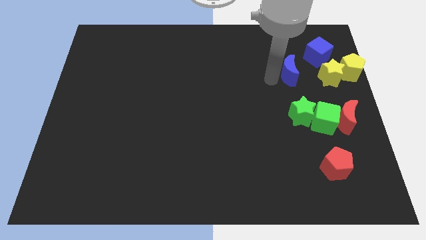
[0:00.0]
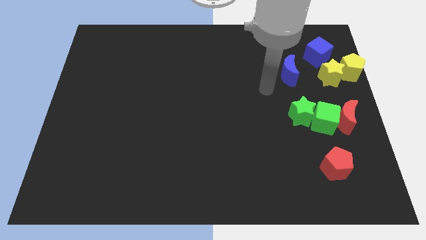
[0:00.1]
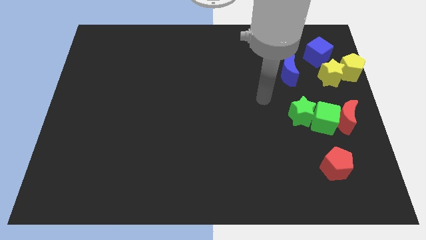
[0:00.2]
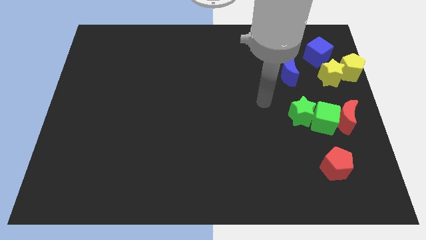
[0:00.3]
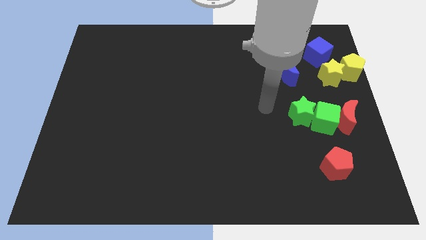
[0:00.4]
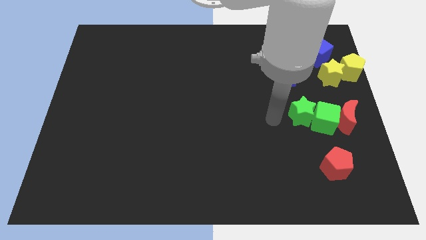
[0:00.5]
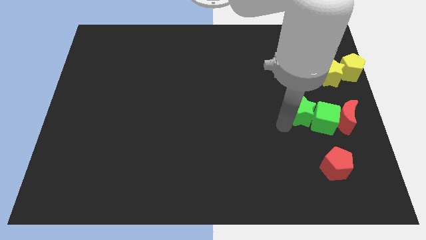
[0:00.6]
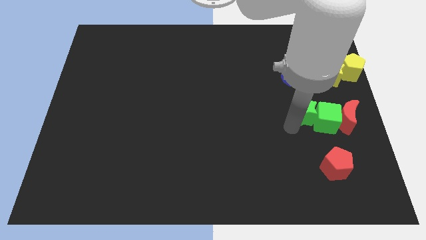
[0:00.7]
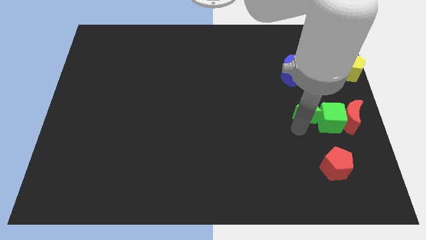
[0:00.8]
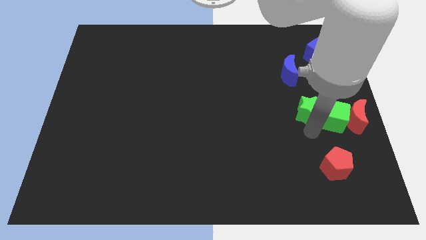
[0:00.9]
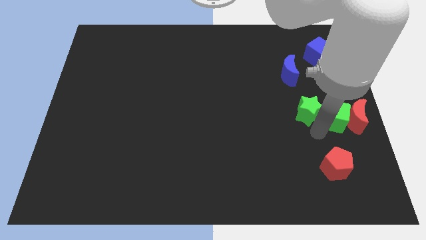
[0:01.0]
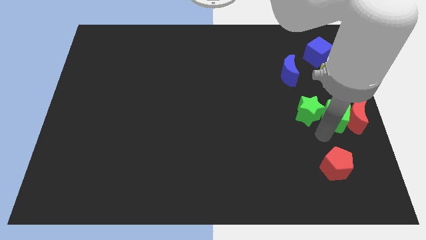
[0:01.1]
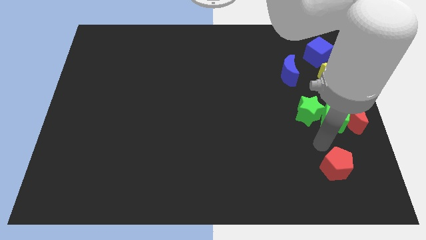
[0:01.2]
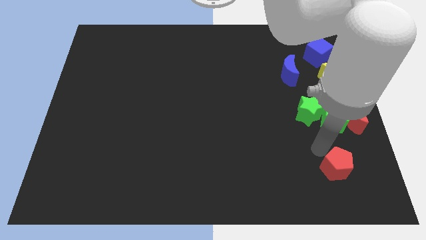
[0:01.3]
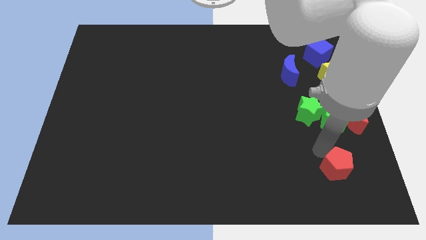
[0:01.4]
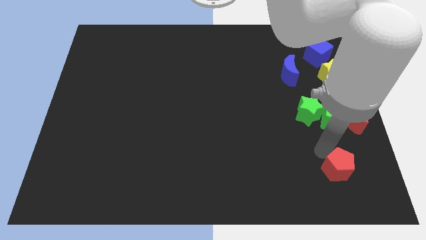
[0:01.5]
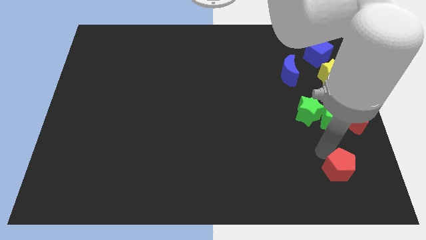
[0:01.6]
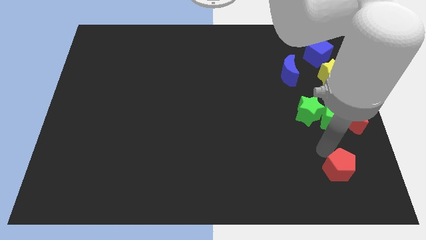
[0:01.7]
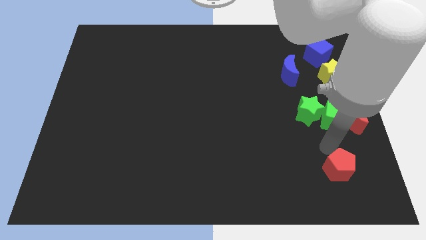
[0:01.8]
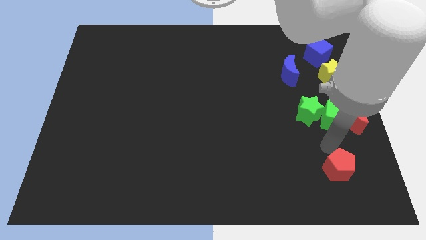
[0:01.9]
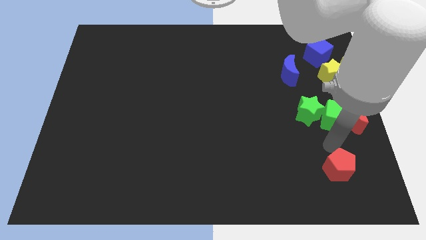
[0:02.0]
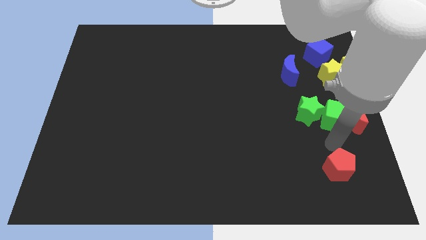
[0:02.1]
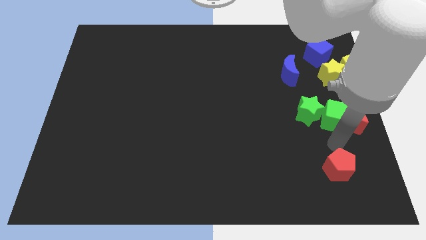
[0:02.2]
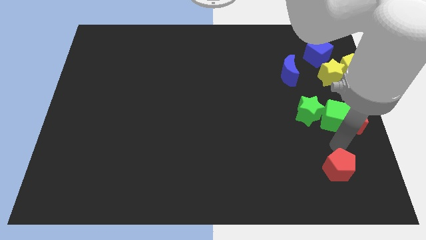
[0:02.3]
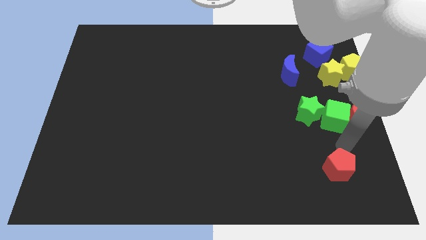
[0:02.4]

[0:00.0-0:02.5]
slightly move the green star green cube red crescent towards center right side

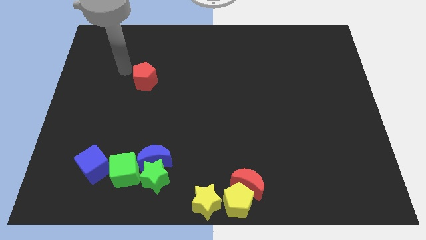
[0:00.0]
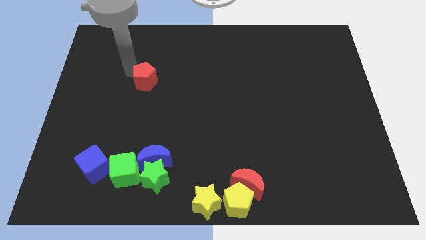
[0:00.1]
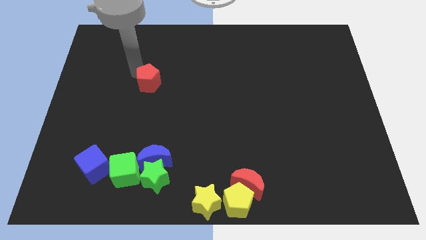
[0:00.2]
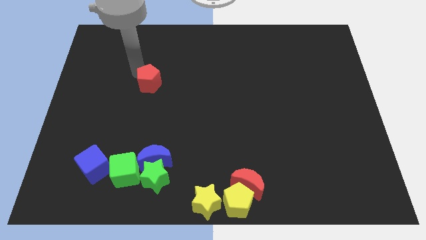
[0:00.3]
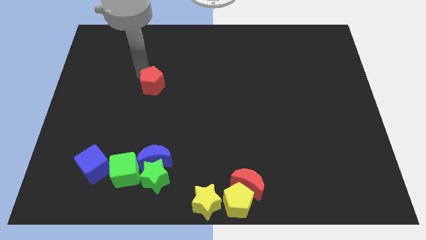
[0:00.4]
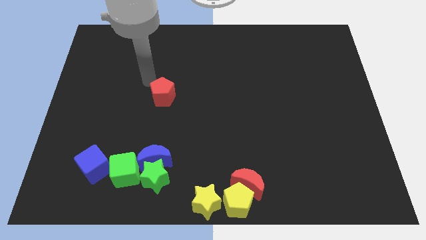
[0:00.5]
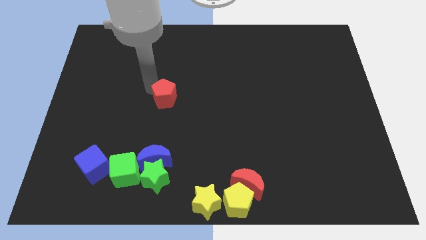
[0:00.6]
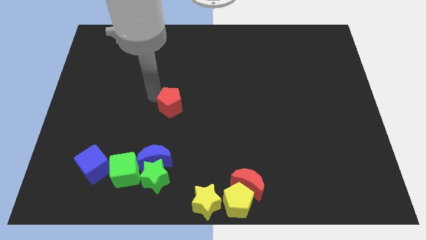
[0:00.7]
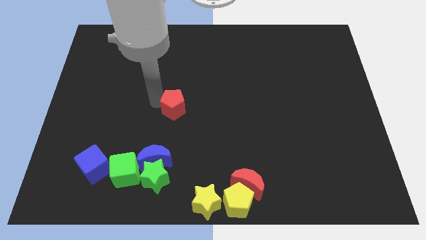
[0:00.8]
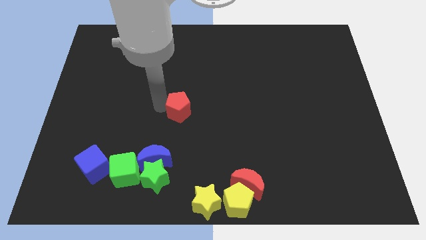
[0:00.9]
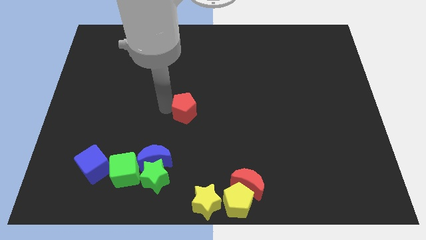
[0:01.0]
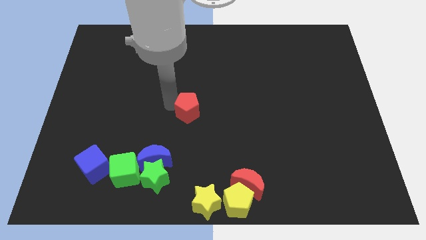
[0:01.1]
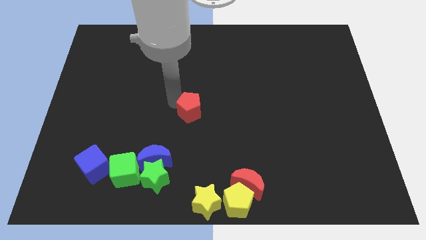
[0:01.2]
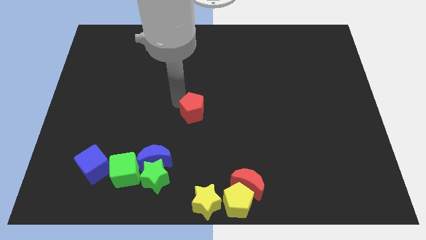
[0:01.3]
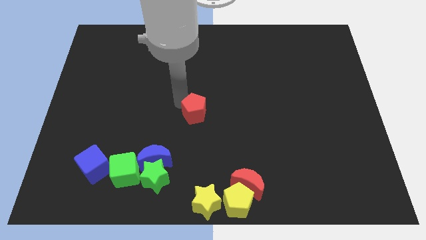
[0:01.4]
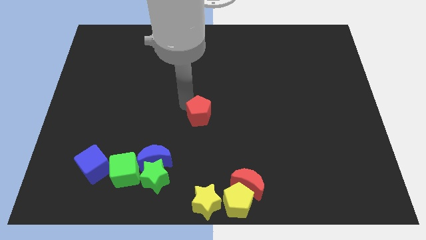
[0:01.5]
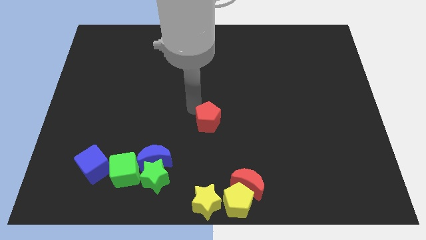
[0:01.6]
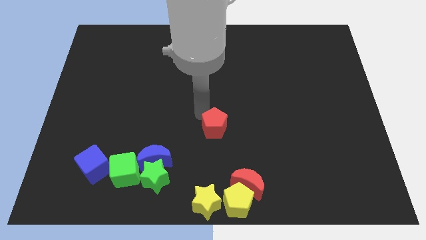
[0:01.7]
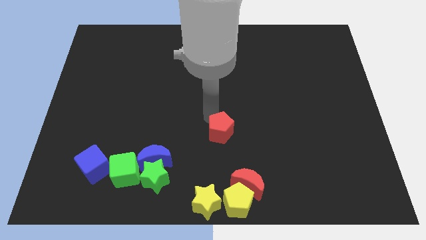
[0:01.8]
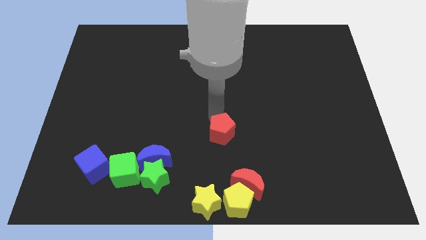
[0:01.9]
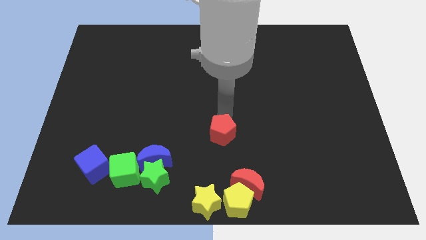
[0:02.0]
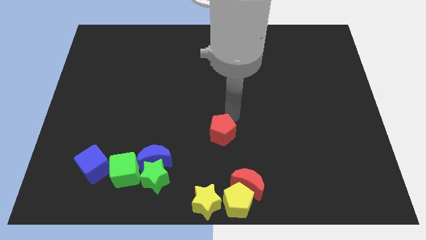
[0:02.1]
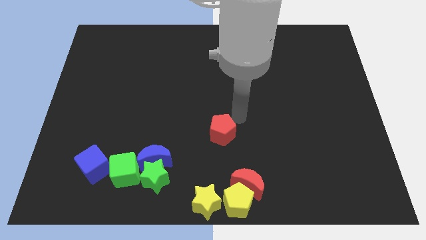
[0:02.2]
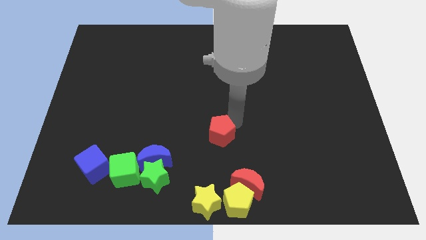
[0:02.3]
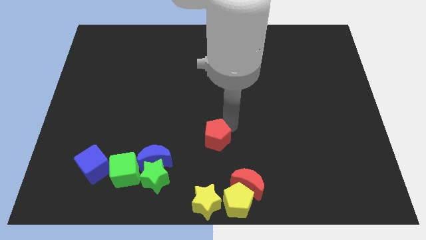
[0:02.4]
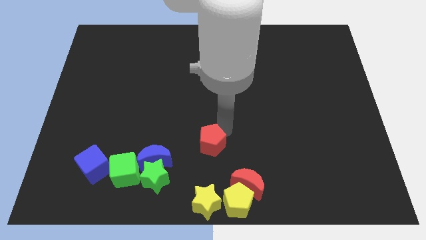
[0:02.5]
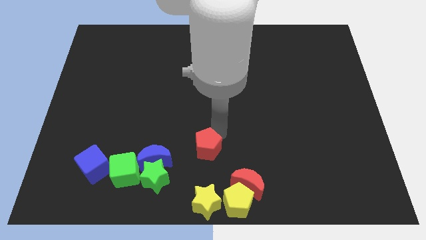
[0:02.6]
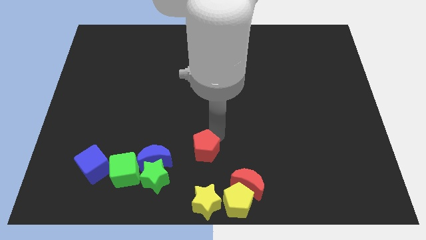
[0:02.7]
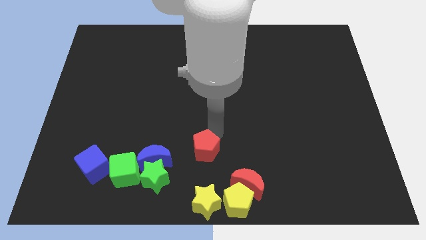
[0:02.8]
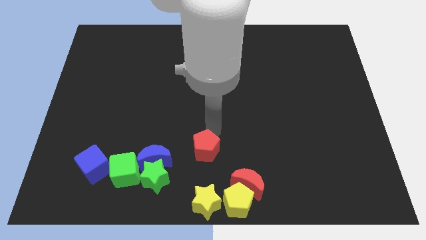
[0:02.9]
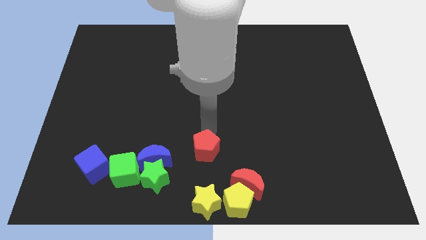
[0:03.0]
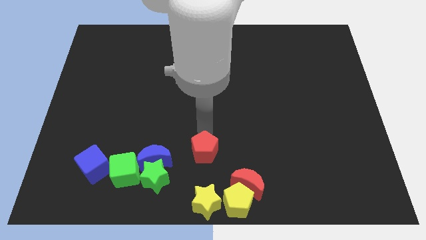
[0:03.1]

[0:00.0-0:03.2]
drag the red pentagon towards bottom side

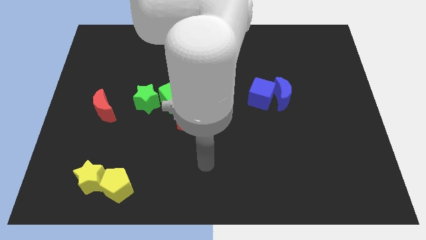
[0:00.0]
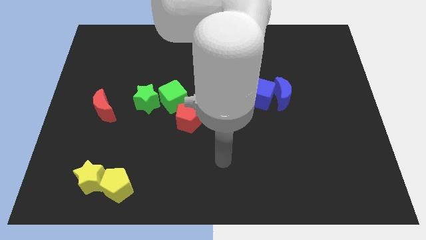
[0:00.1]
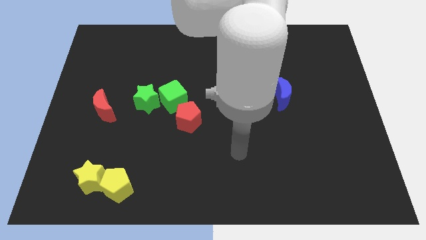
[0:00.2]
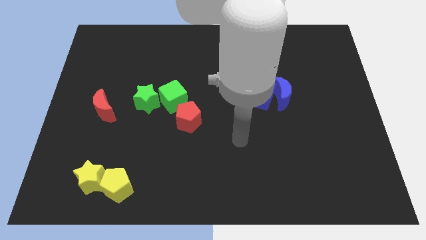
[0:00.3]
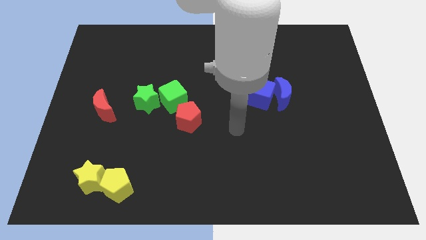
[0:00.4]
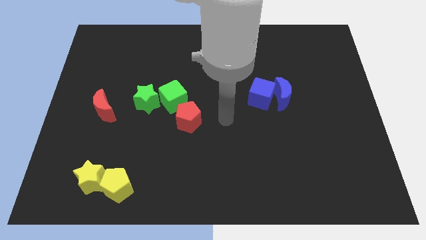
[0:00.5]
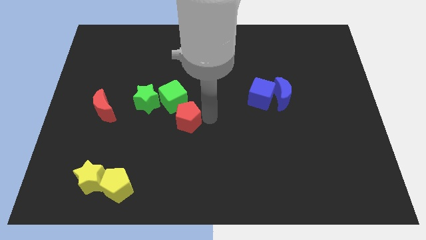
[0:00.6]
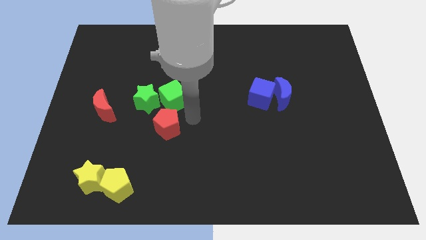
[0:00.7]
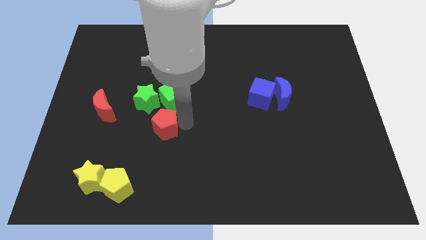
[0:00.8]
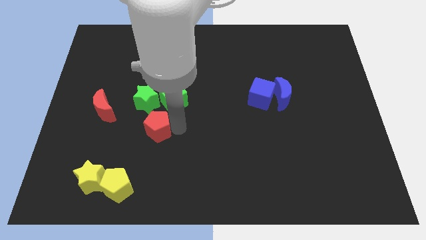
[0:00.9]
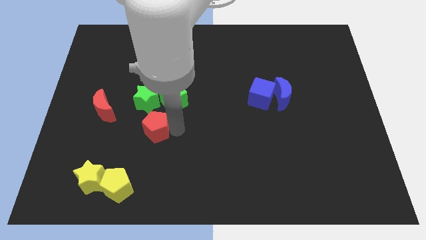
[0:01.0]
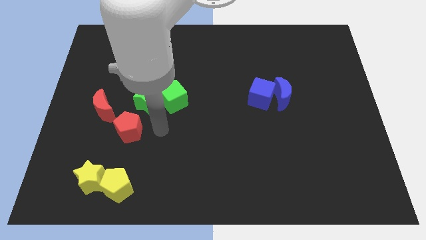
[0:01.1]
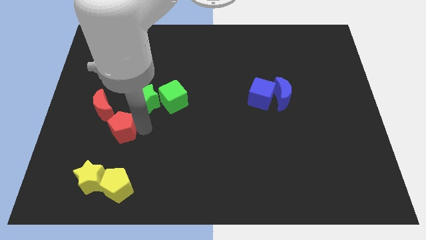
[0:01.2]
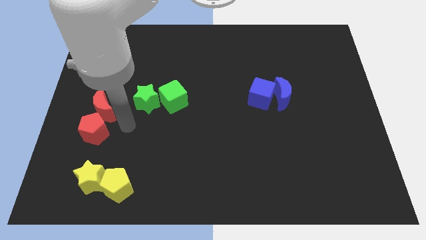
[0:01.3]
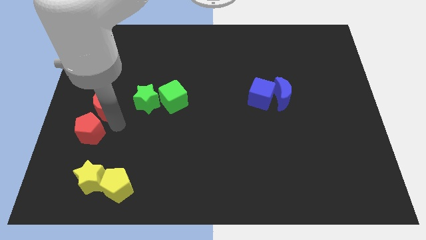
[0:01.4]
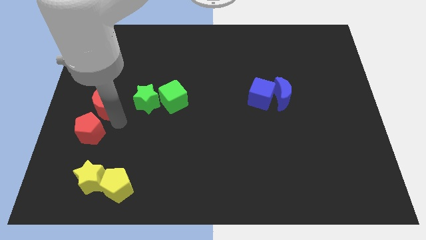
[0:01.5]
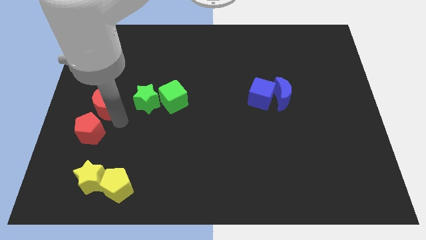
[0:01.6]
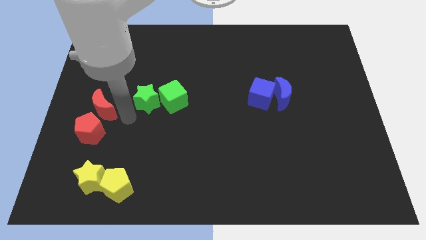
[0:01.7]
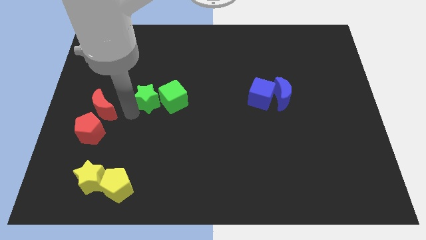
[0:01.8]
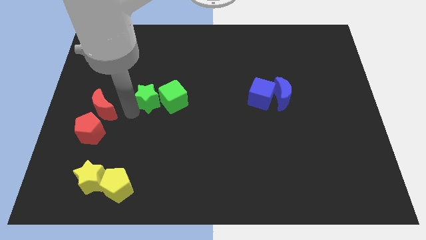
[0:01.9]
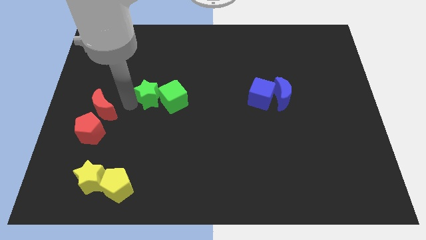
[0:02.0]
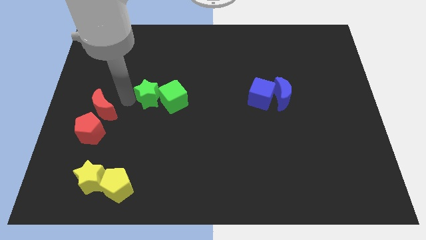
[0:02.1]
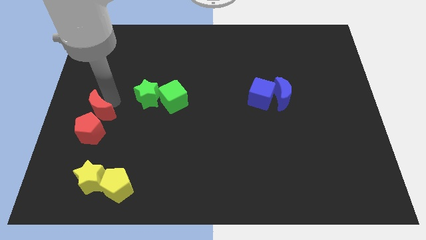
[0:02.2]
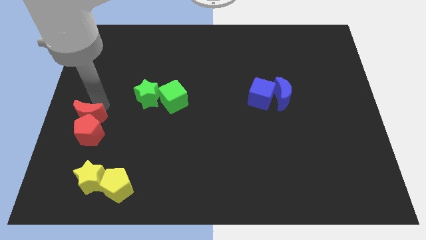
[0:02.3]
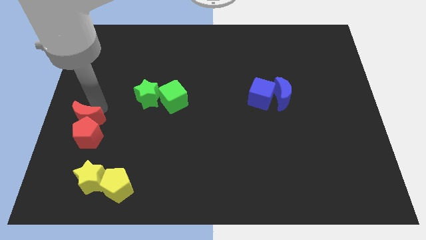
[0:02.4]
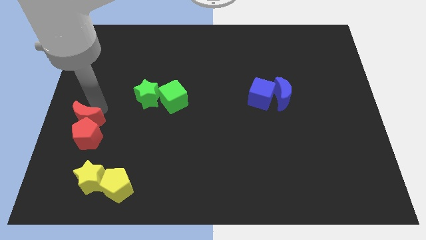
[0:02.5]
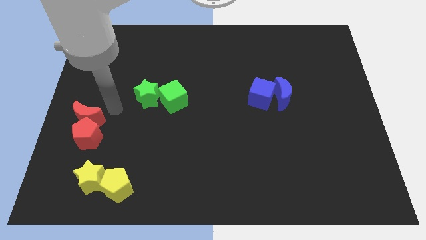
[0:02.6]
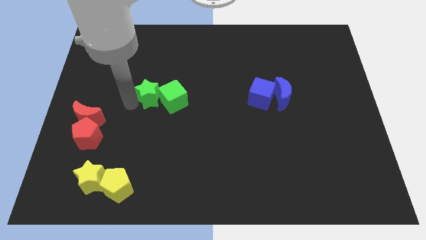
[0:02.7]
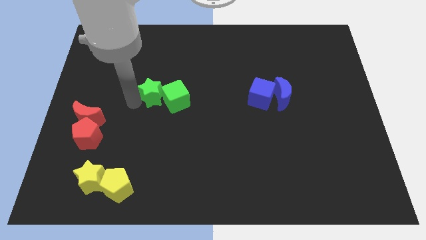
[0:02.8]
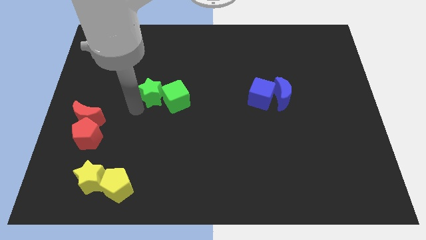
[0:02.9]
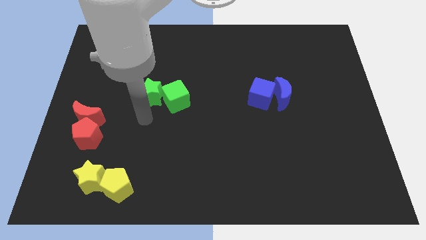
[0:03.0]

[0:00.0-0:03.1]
place the red pentagon below the red moon

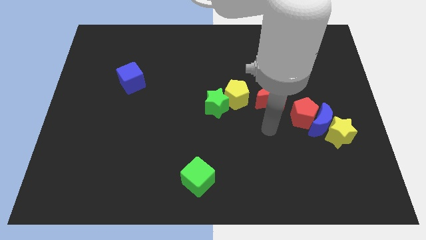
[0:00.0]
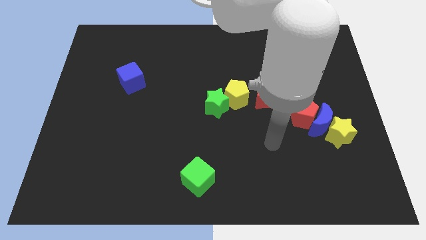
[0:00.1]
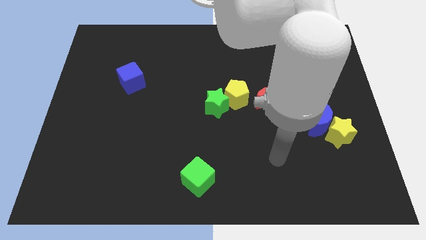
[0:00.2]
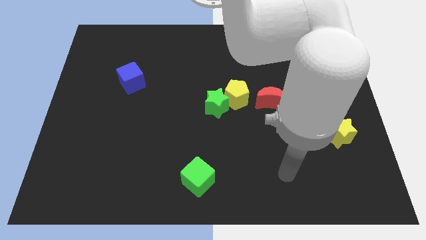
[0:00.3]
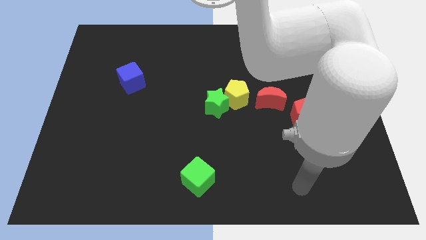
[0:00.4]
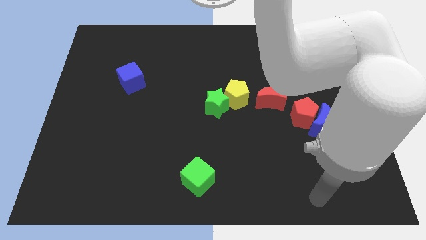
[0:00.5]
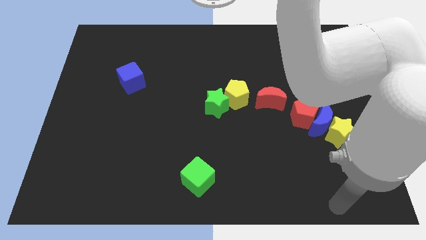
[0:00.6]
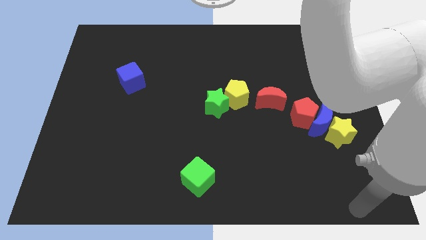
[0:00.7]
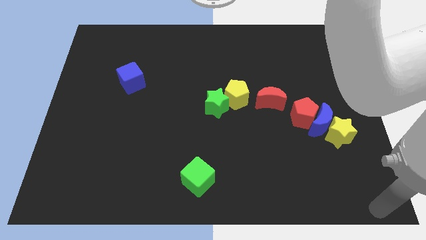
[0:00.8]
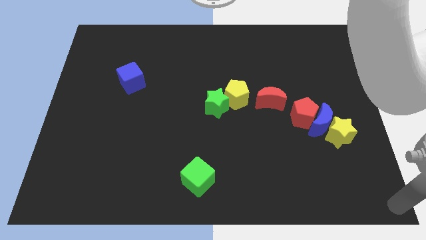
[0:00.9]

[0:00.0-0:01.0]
place your arm at the bottom right corner of the board
